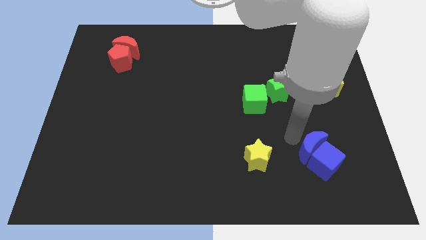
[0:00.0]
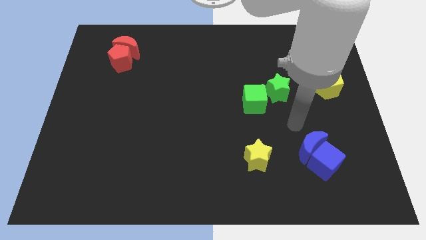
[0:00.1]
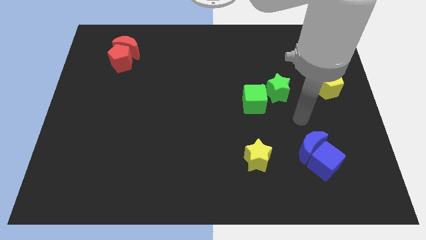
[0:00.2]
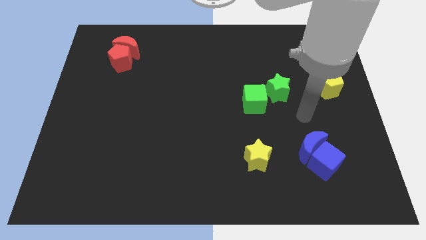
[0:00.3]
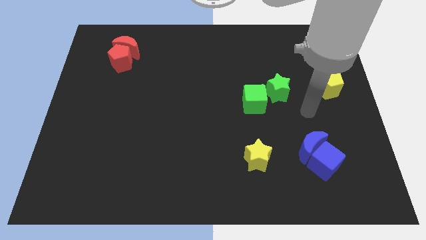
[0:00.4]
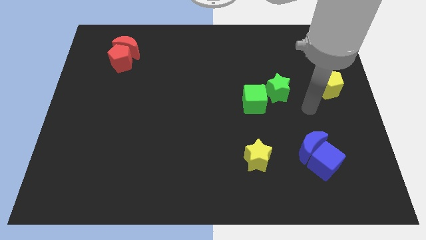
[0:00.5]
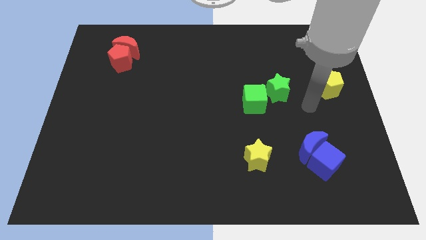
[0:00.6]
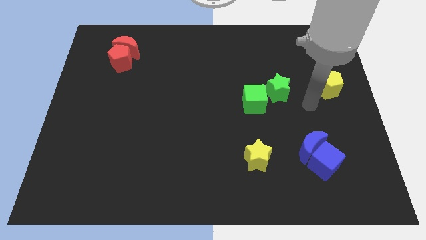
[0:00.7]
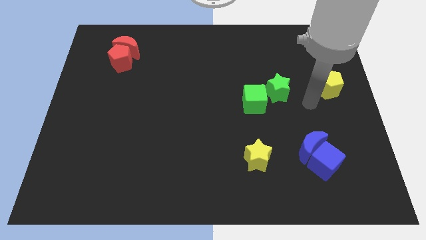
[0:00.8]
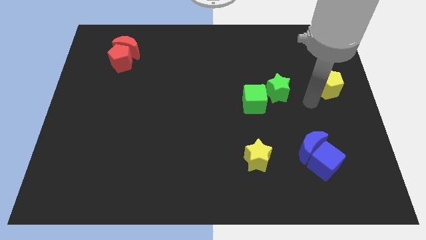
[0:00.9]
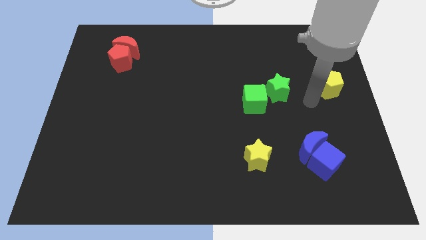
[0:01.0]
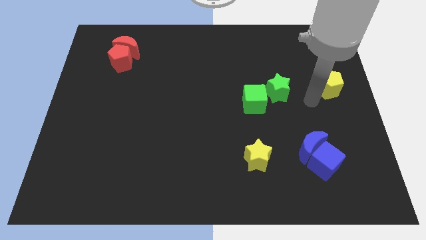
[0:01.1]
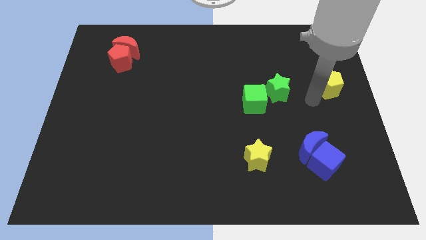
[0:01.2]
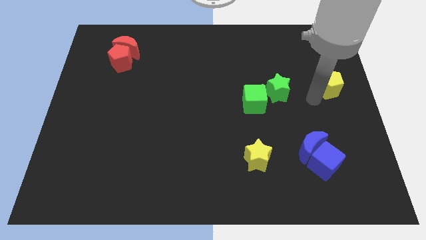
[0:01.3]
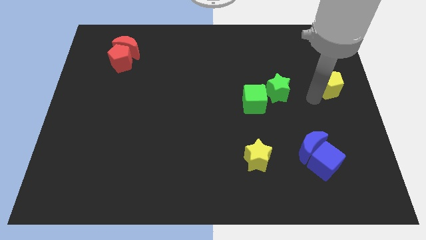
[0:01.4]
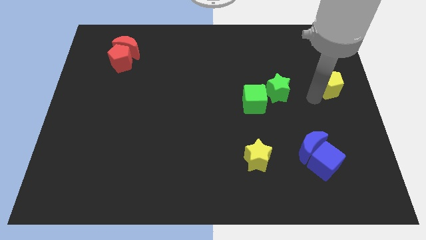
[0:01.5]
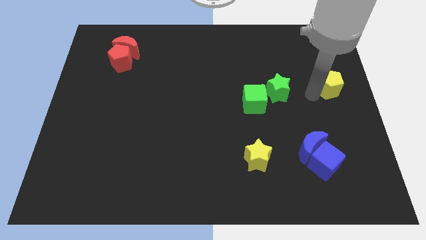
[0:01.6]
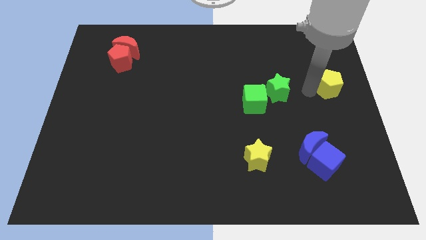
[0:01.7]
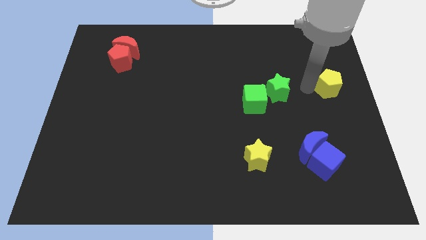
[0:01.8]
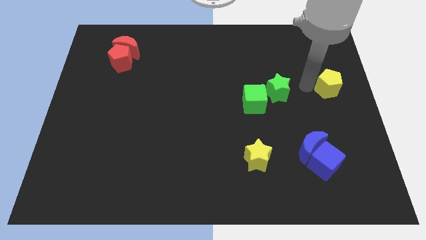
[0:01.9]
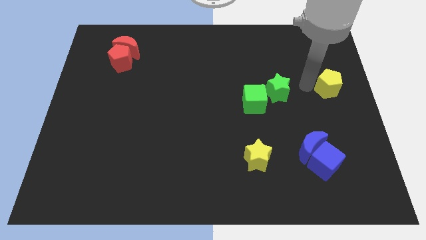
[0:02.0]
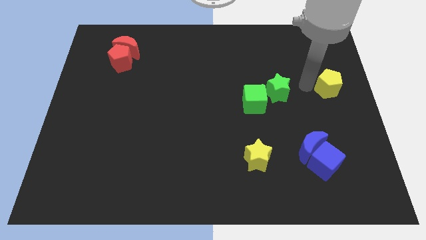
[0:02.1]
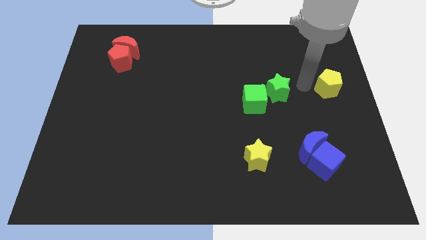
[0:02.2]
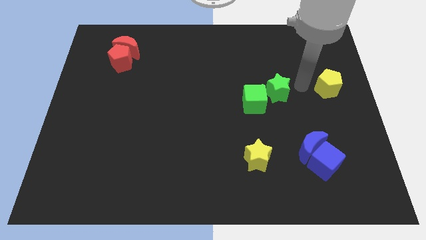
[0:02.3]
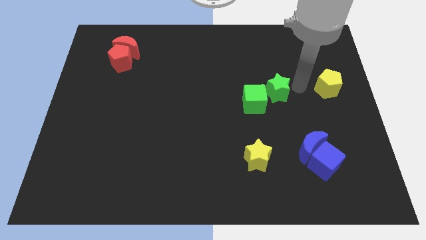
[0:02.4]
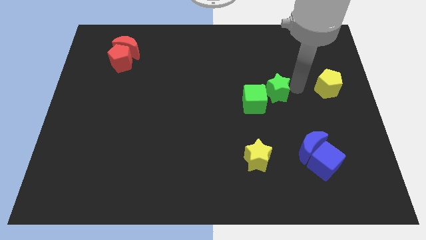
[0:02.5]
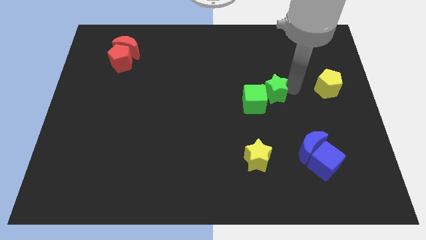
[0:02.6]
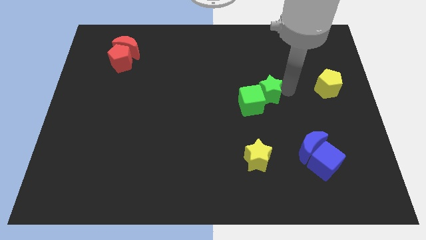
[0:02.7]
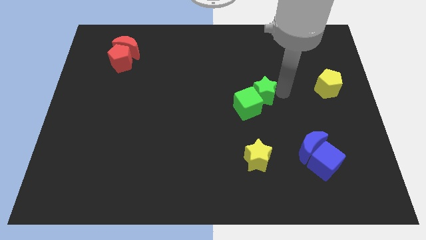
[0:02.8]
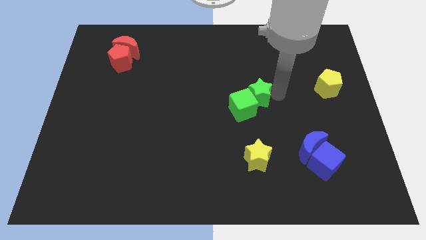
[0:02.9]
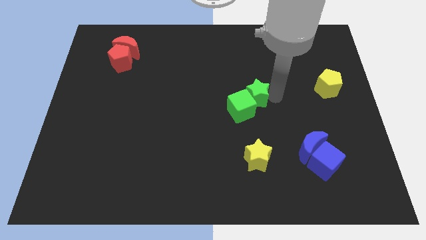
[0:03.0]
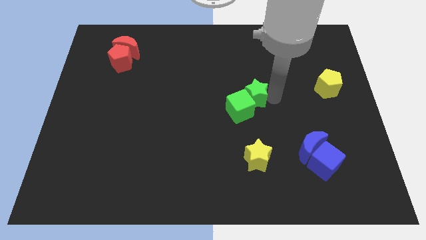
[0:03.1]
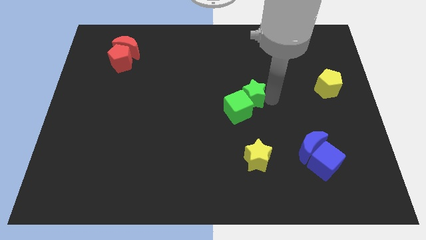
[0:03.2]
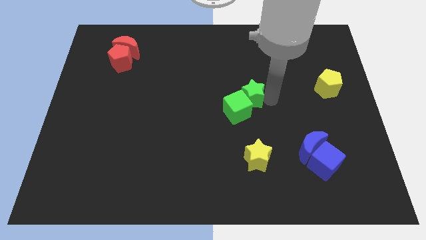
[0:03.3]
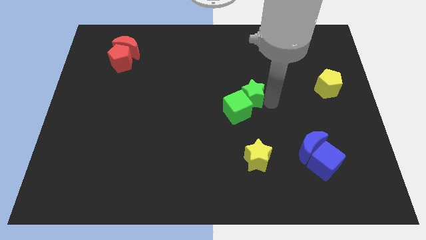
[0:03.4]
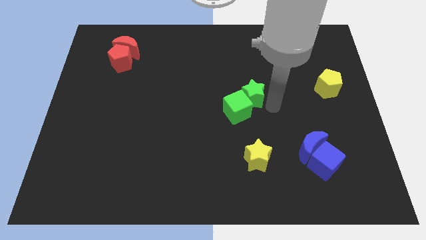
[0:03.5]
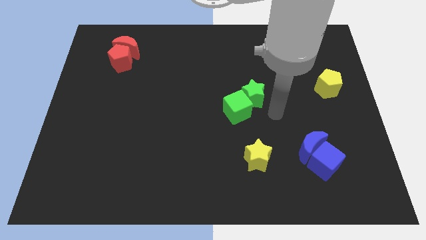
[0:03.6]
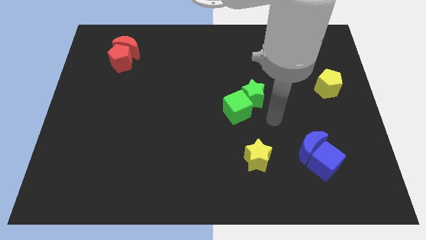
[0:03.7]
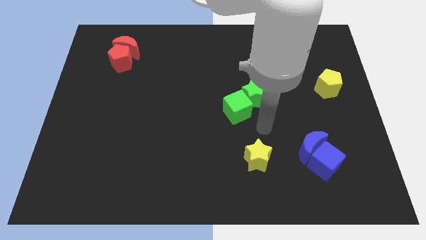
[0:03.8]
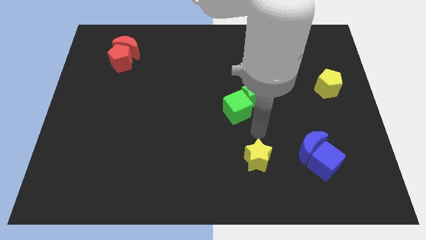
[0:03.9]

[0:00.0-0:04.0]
push the green star into the green cube

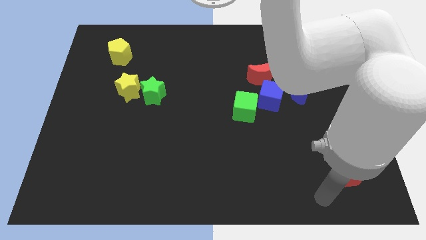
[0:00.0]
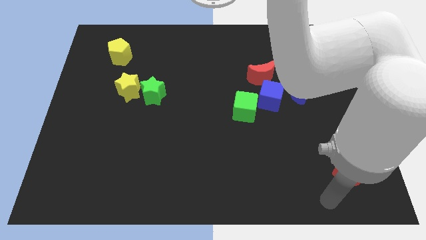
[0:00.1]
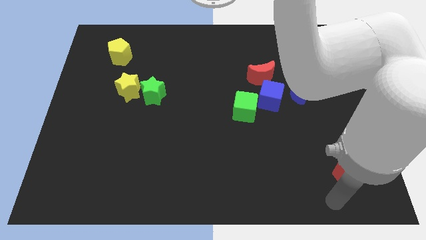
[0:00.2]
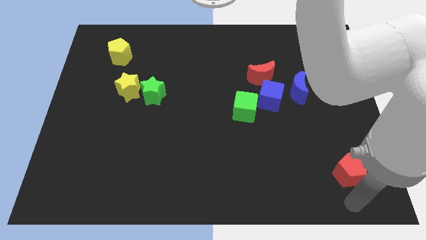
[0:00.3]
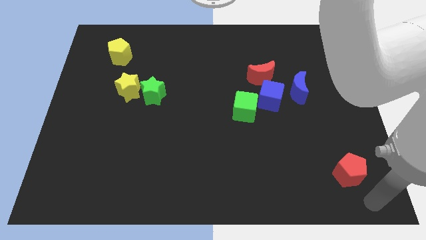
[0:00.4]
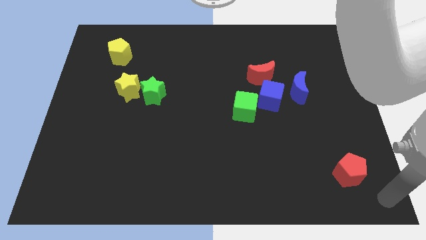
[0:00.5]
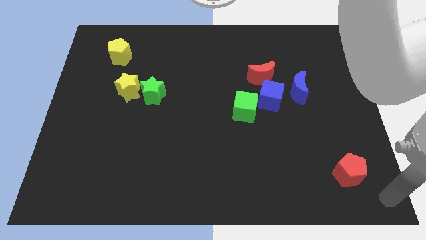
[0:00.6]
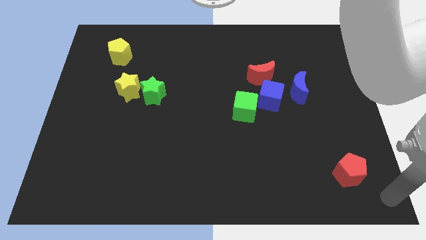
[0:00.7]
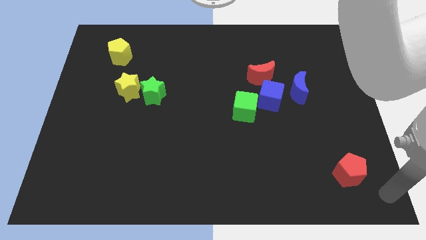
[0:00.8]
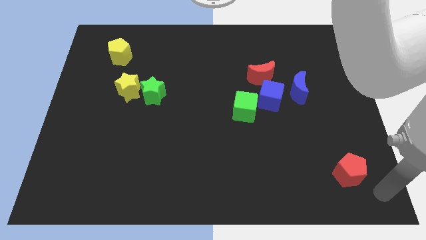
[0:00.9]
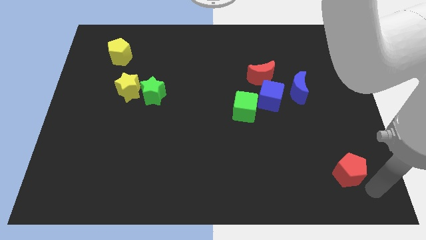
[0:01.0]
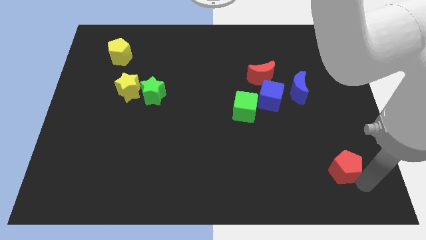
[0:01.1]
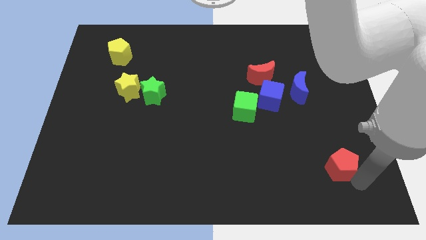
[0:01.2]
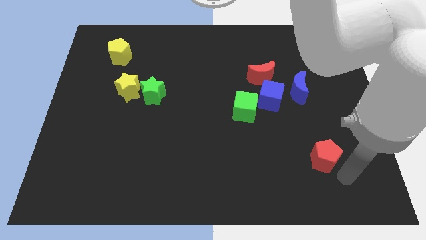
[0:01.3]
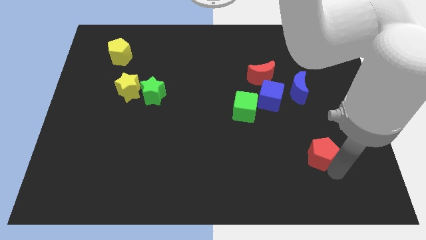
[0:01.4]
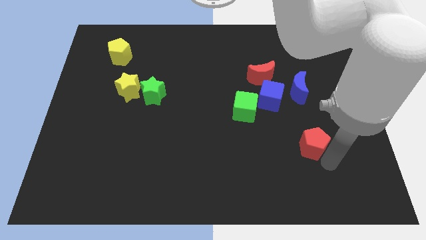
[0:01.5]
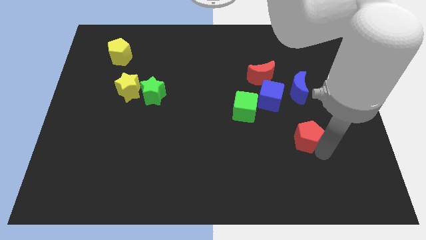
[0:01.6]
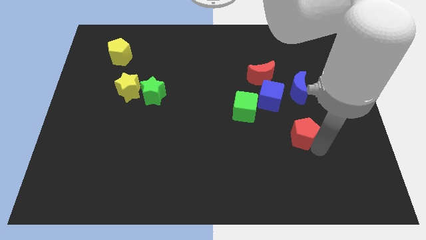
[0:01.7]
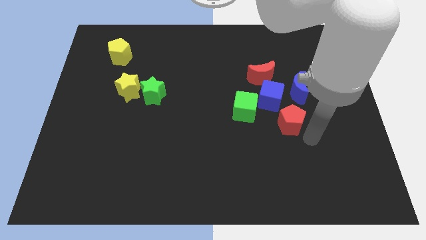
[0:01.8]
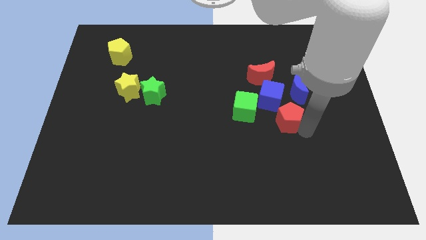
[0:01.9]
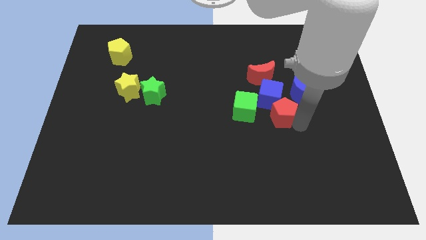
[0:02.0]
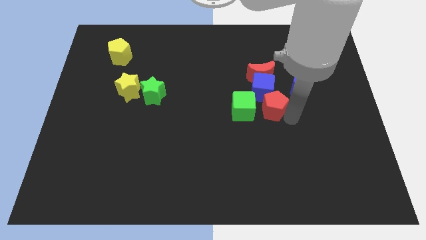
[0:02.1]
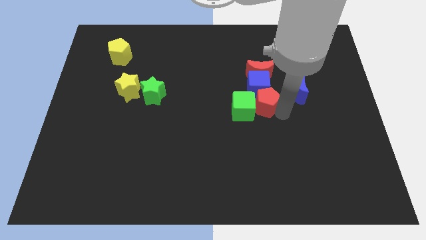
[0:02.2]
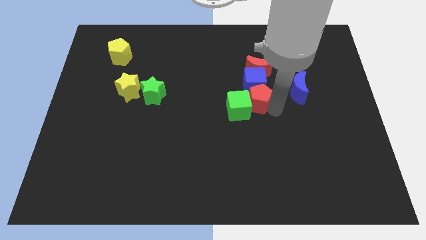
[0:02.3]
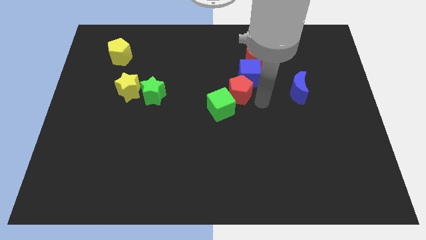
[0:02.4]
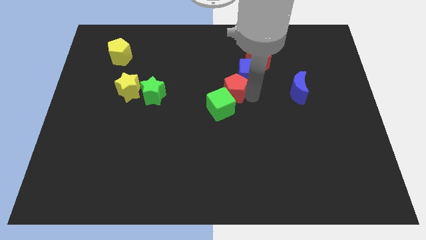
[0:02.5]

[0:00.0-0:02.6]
move the red pentagon in between blue cube and green cube

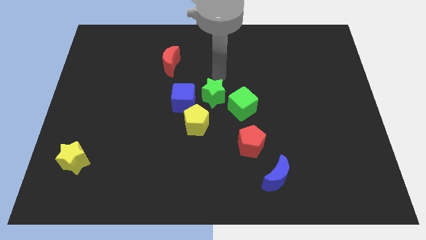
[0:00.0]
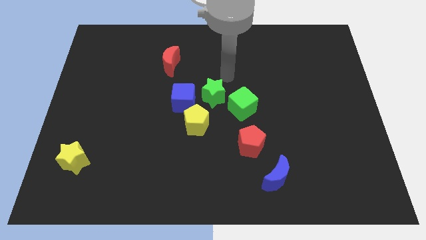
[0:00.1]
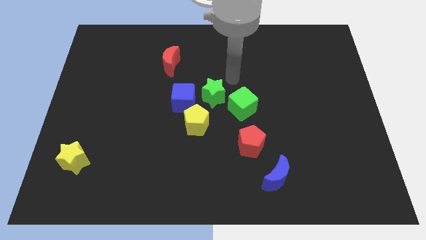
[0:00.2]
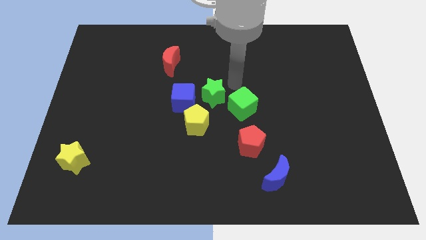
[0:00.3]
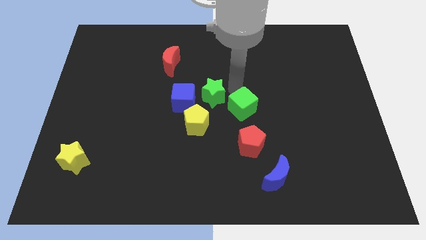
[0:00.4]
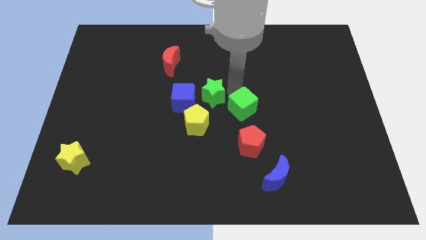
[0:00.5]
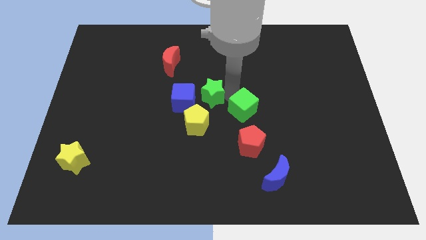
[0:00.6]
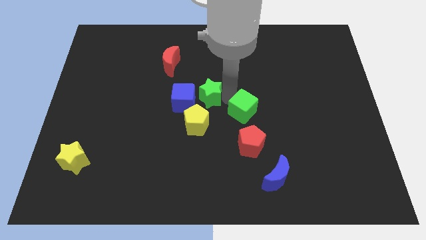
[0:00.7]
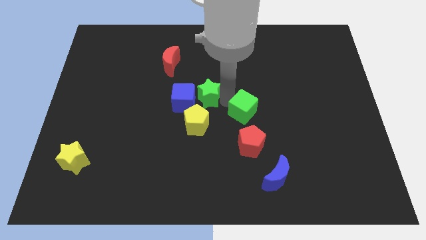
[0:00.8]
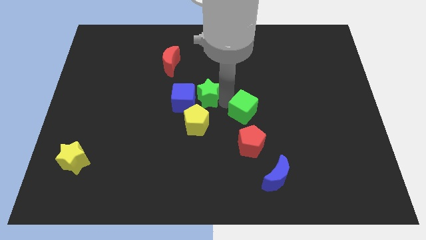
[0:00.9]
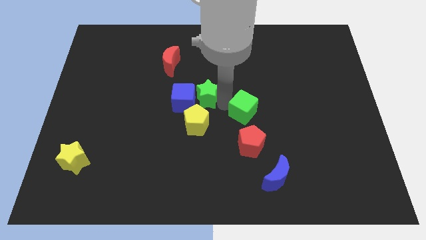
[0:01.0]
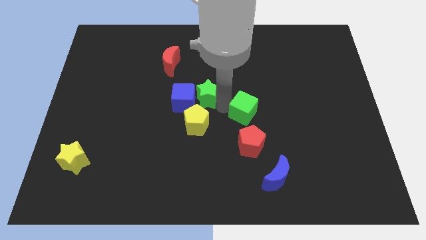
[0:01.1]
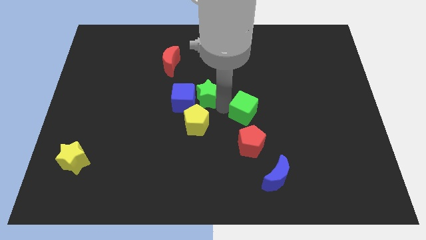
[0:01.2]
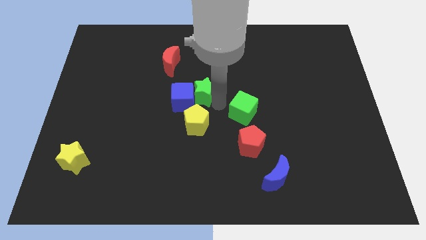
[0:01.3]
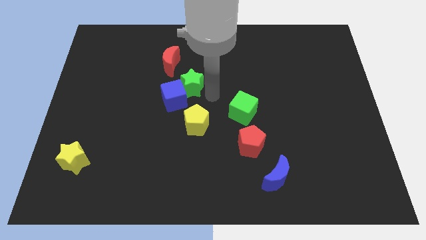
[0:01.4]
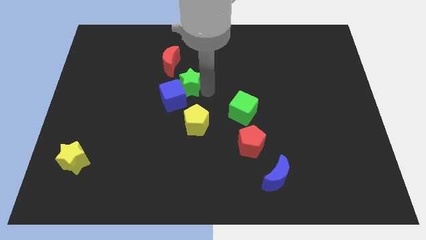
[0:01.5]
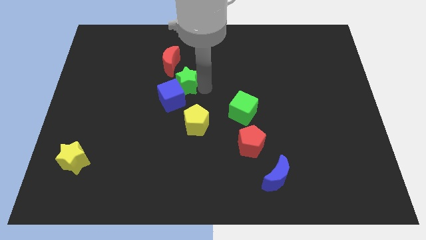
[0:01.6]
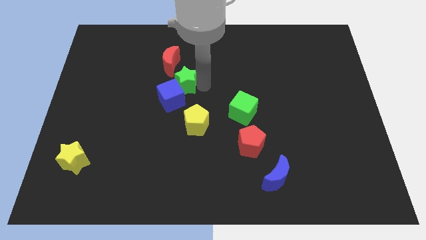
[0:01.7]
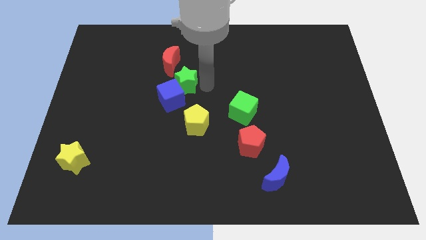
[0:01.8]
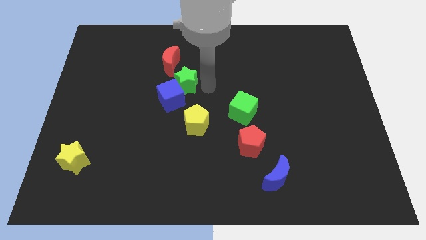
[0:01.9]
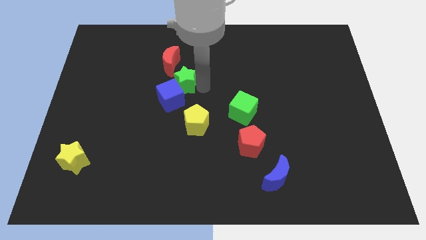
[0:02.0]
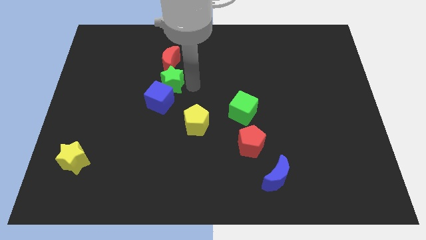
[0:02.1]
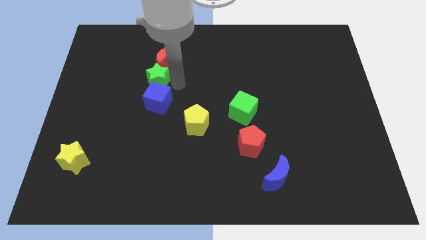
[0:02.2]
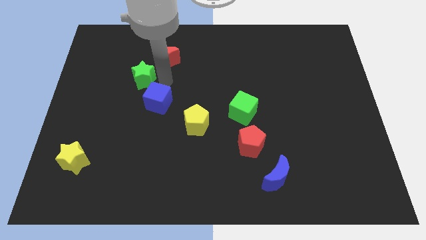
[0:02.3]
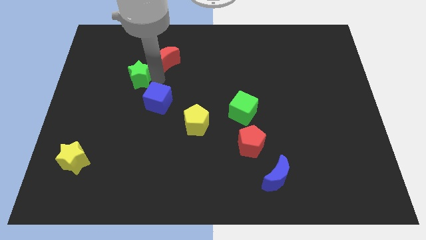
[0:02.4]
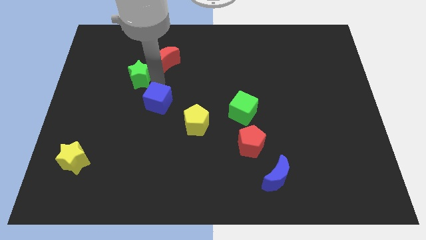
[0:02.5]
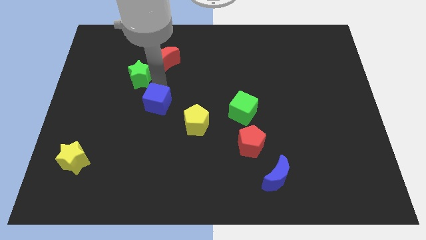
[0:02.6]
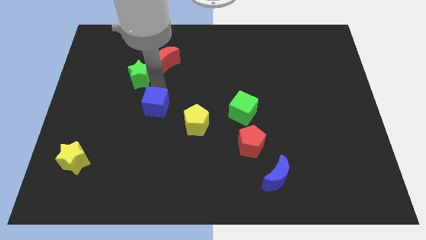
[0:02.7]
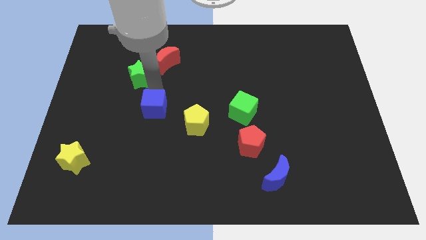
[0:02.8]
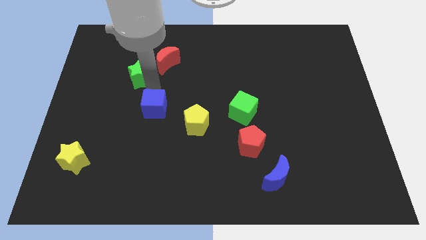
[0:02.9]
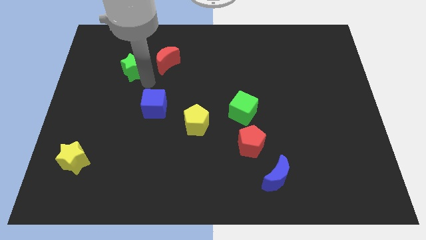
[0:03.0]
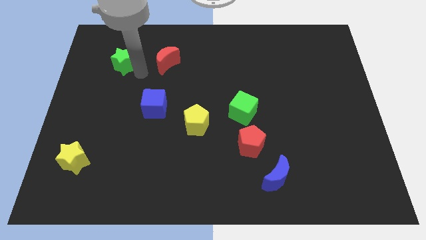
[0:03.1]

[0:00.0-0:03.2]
separate green star from green cube
